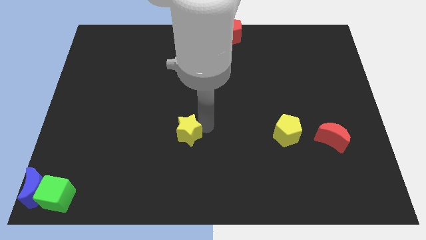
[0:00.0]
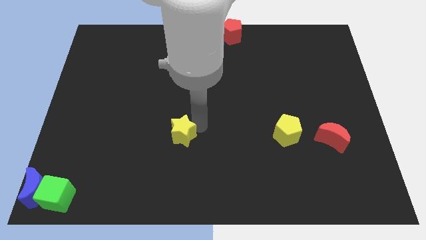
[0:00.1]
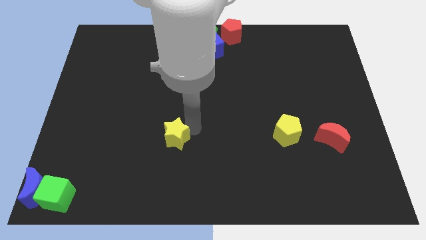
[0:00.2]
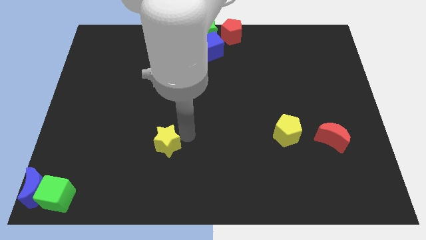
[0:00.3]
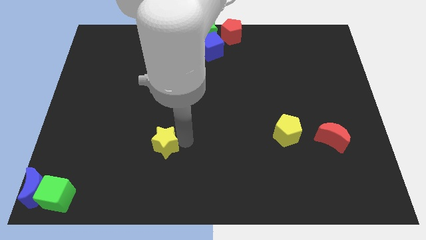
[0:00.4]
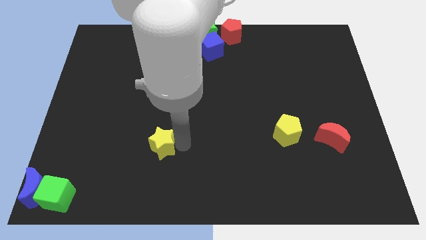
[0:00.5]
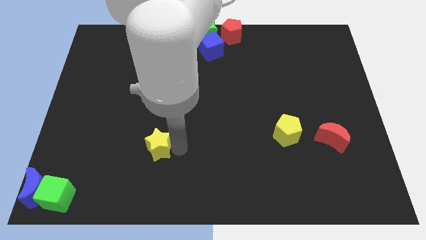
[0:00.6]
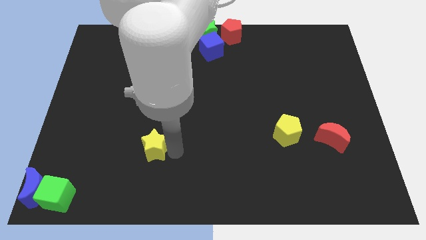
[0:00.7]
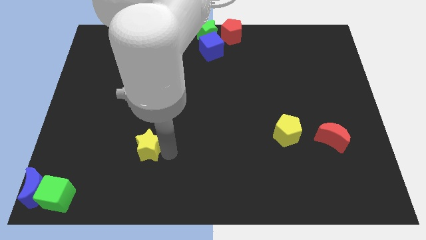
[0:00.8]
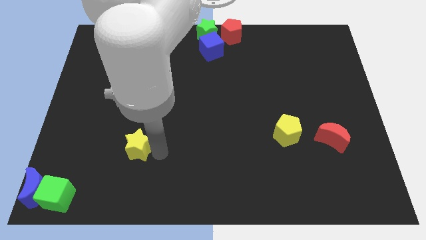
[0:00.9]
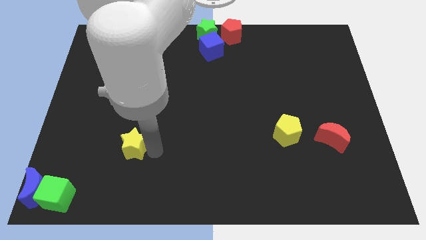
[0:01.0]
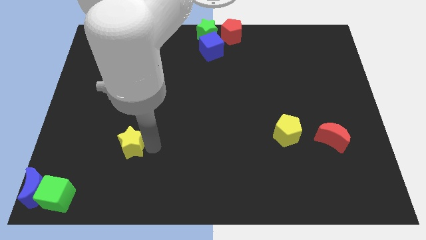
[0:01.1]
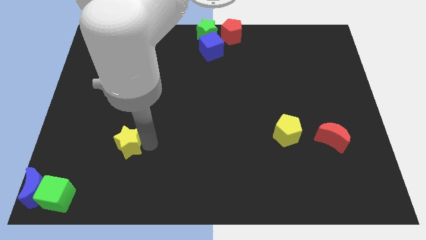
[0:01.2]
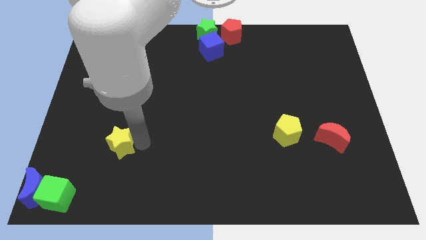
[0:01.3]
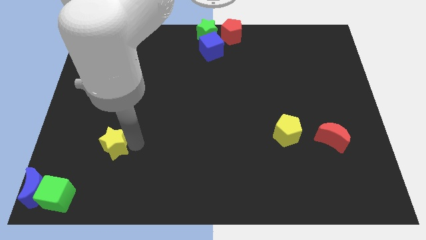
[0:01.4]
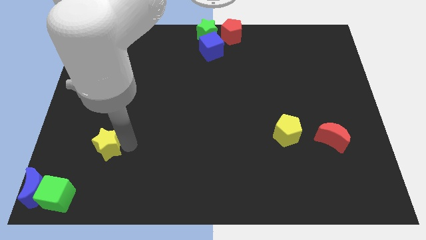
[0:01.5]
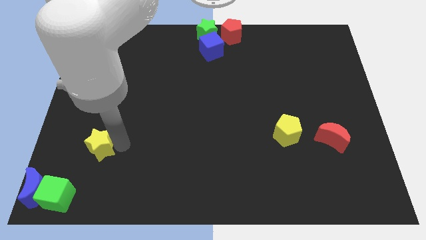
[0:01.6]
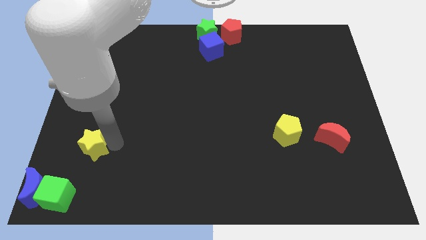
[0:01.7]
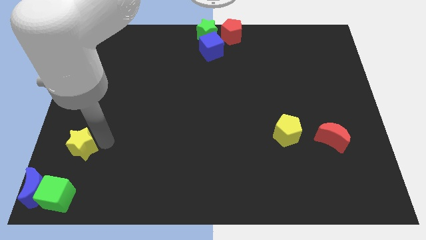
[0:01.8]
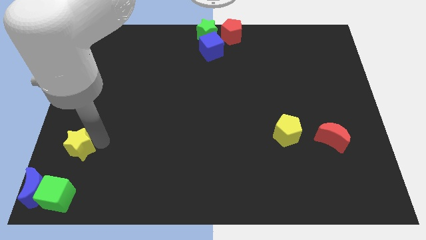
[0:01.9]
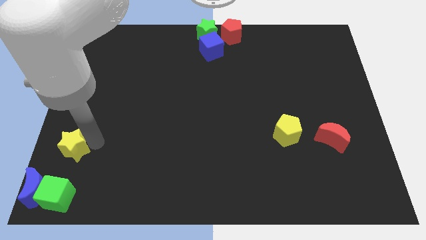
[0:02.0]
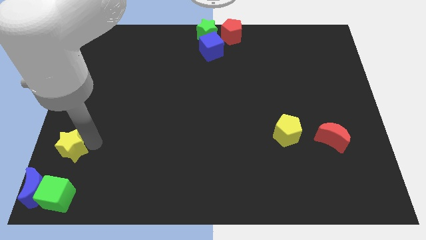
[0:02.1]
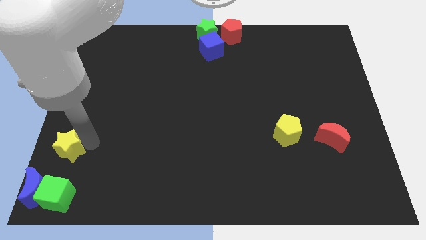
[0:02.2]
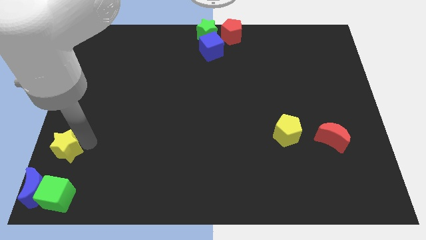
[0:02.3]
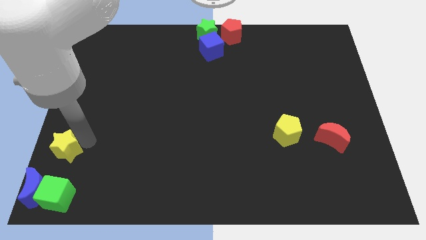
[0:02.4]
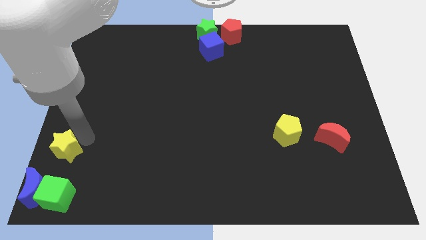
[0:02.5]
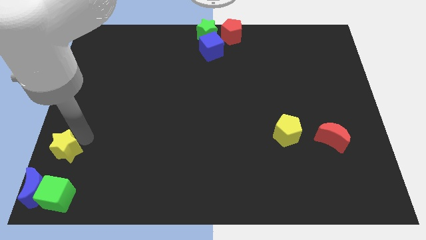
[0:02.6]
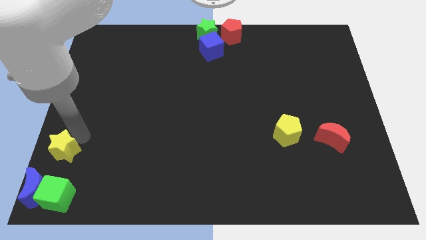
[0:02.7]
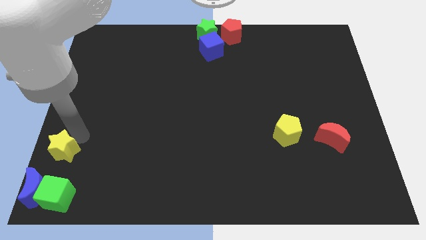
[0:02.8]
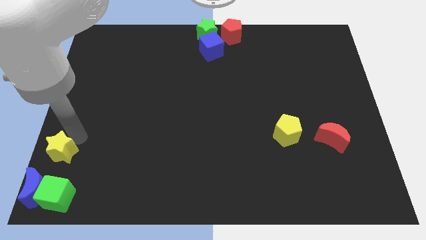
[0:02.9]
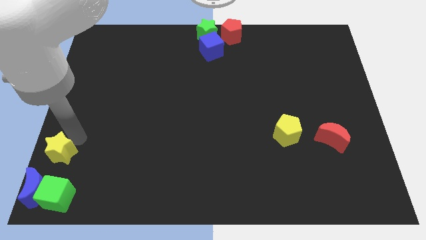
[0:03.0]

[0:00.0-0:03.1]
push the yellow star to the top side of the green cube

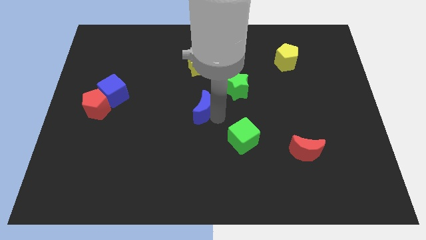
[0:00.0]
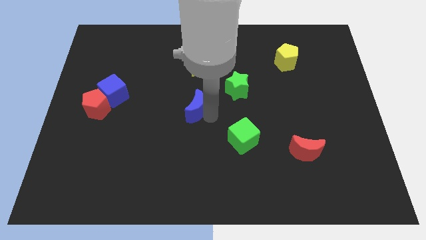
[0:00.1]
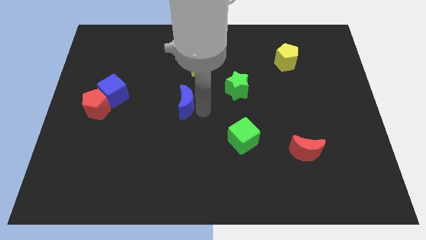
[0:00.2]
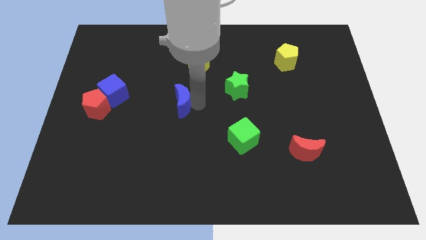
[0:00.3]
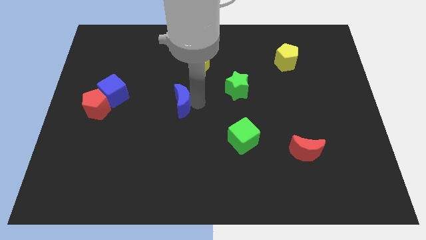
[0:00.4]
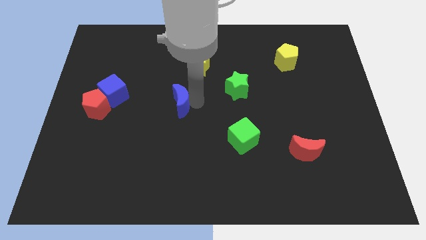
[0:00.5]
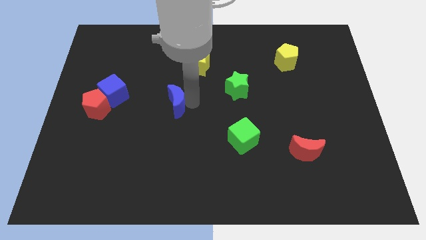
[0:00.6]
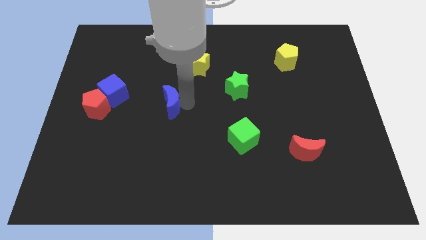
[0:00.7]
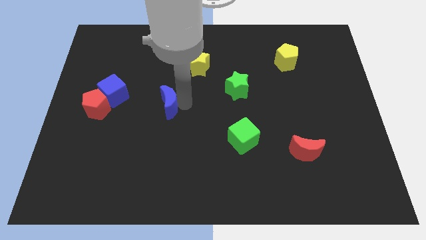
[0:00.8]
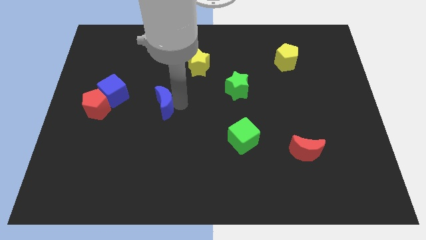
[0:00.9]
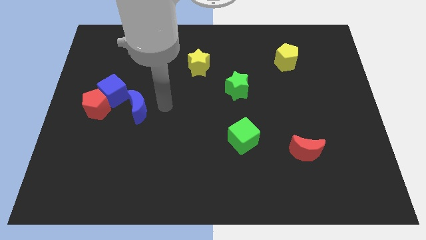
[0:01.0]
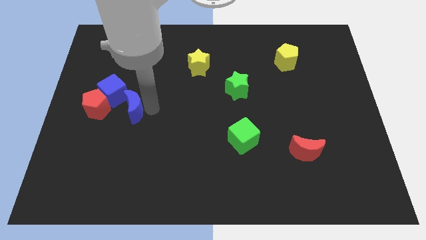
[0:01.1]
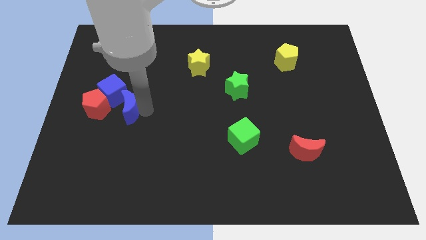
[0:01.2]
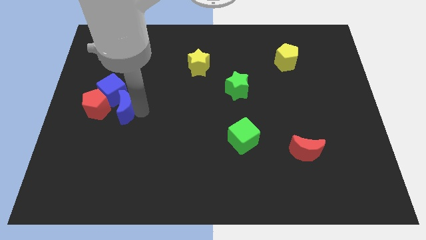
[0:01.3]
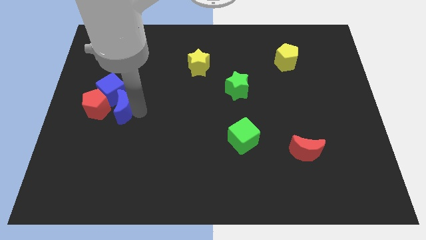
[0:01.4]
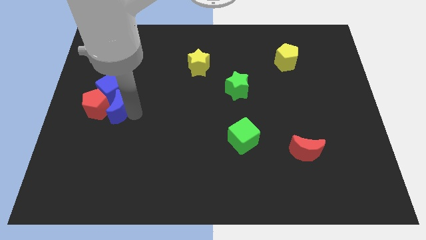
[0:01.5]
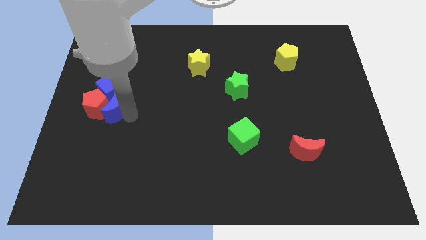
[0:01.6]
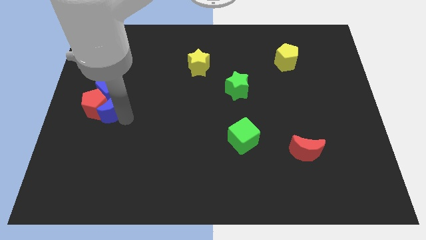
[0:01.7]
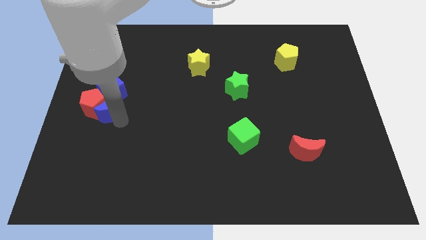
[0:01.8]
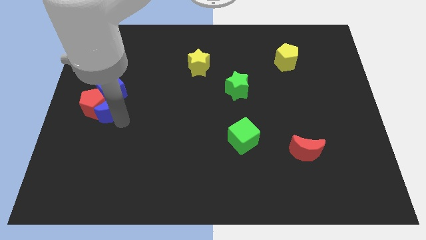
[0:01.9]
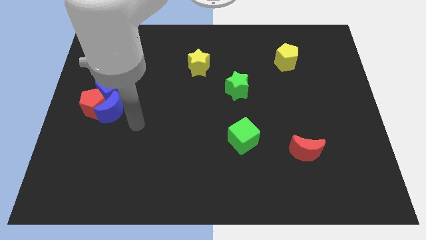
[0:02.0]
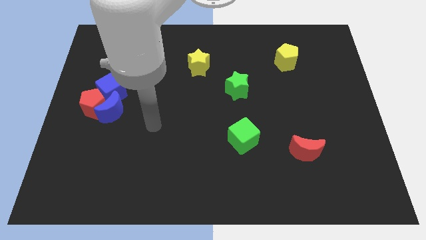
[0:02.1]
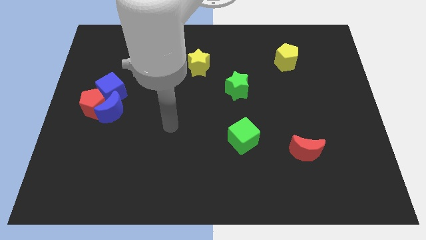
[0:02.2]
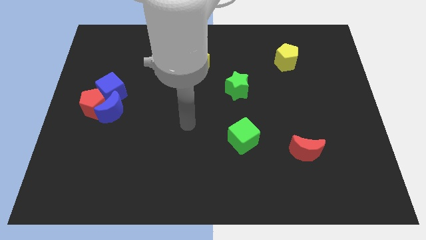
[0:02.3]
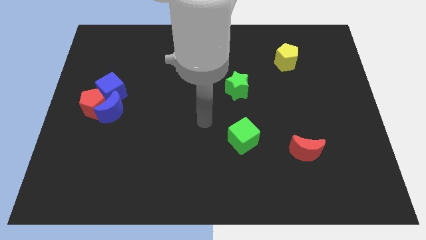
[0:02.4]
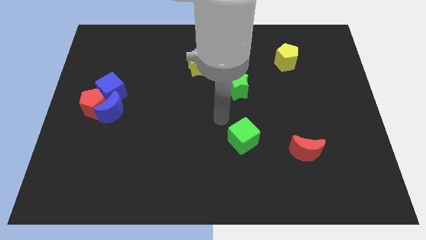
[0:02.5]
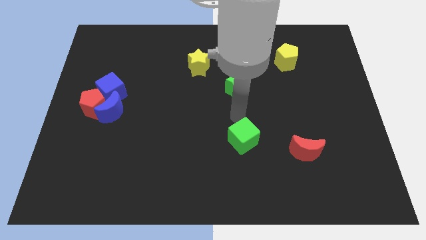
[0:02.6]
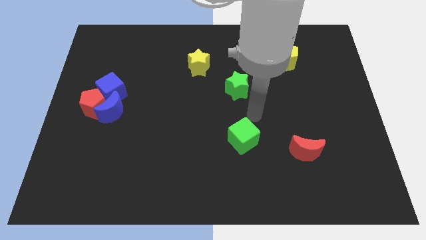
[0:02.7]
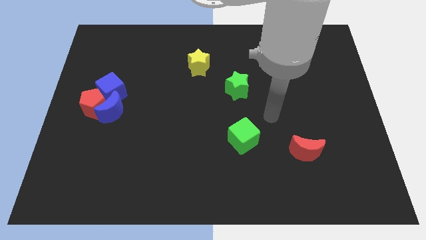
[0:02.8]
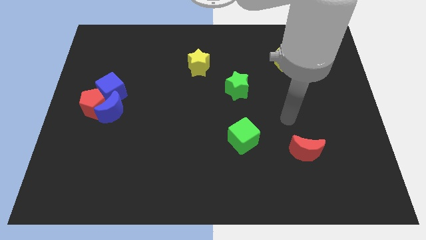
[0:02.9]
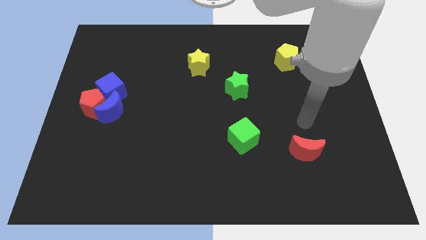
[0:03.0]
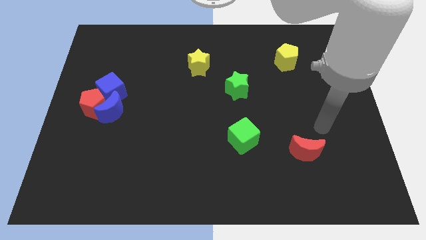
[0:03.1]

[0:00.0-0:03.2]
move the blue moon near to the group of blue cube and red pentagon at the center left of the board

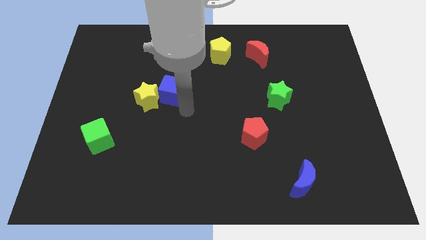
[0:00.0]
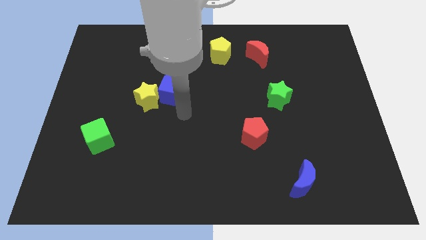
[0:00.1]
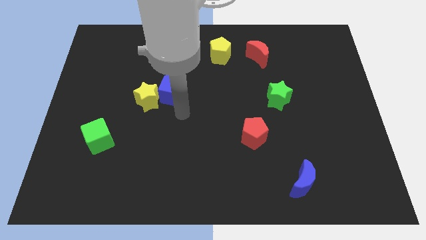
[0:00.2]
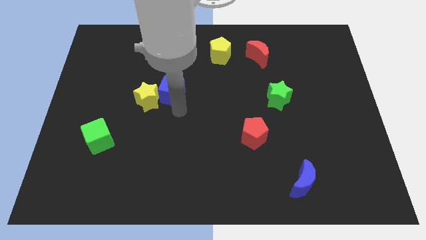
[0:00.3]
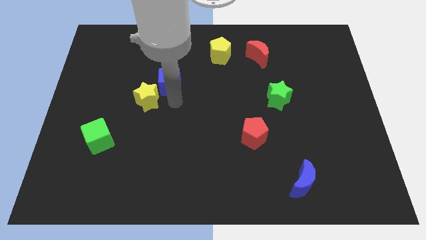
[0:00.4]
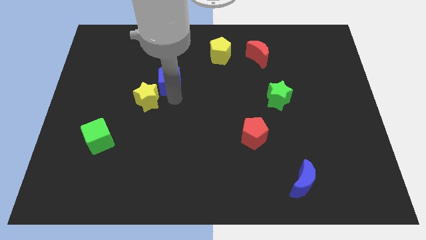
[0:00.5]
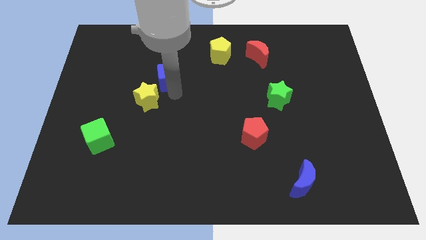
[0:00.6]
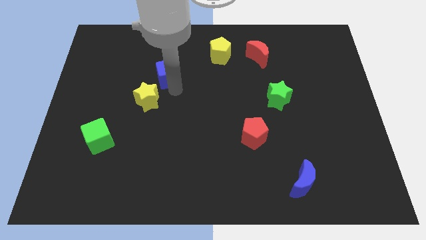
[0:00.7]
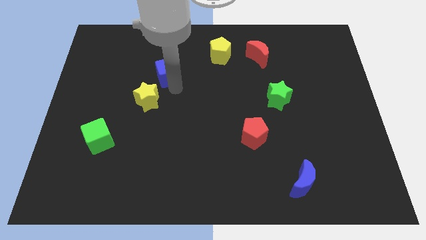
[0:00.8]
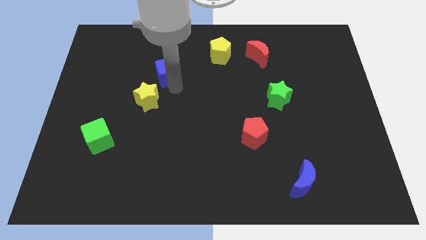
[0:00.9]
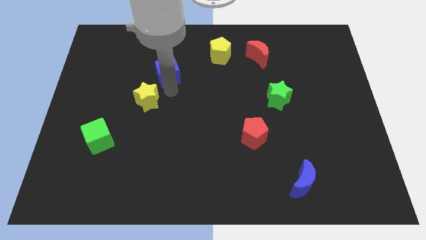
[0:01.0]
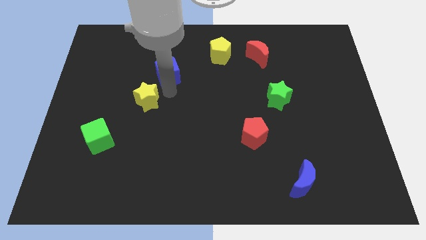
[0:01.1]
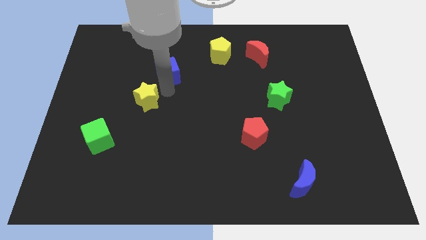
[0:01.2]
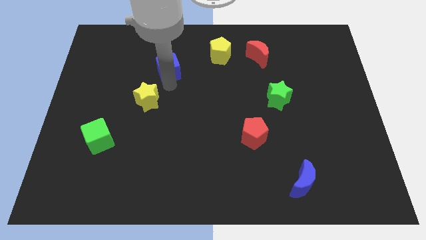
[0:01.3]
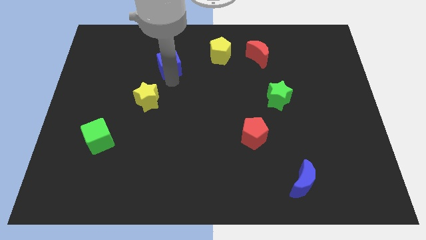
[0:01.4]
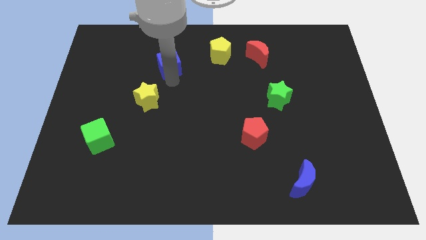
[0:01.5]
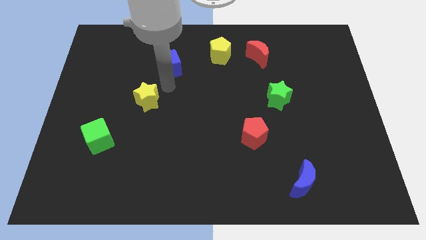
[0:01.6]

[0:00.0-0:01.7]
push blue cube upwards

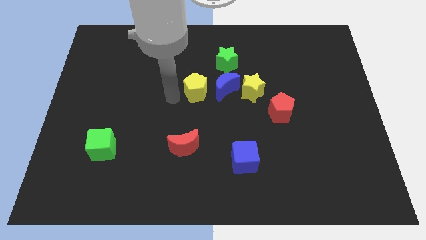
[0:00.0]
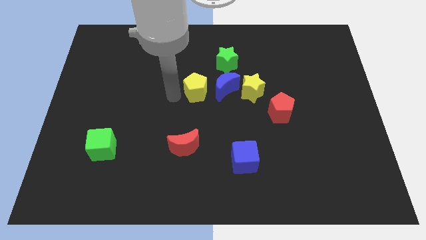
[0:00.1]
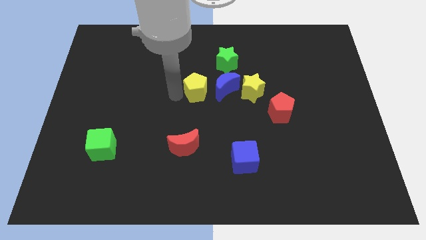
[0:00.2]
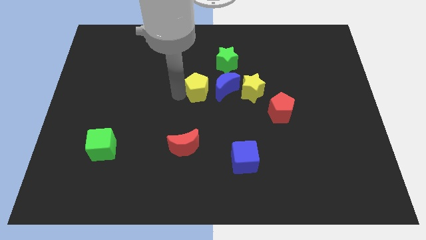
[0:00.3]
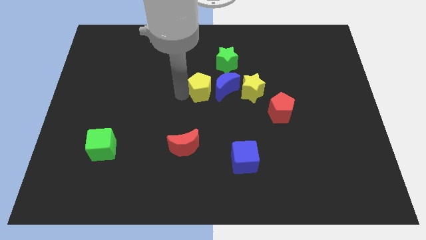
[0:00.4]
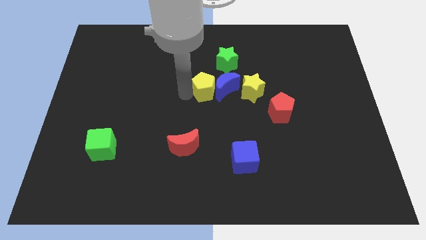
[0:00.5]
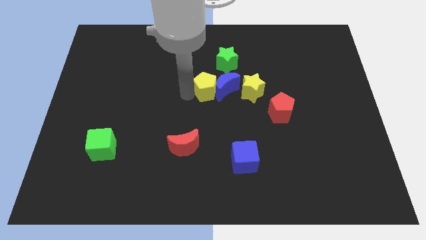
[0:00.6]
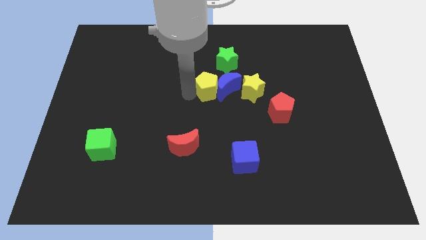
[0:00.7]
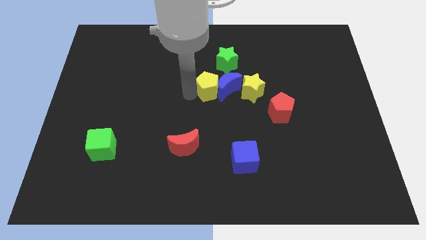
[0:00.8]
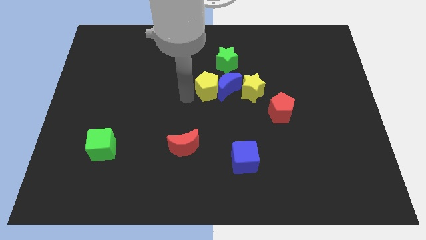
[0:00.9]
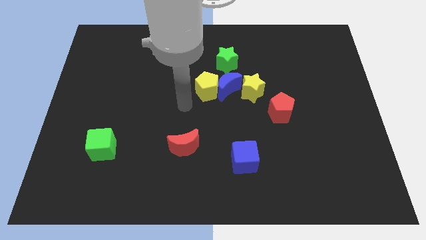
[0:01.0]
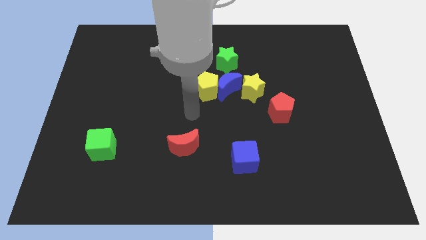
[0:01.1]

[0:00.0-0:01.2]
push the blue crescent into the yellow star with the help of the yellow pentagon
